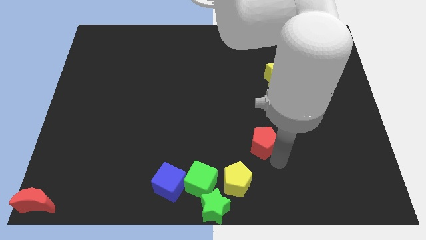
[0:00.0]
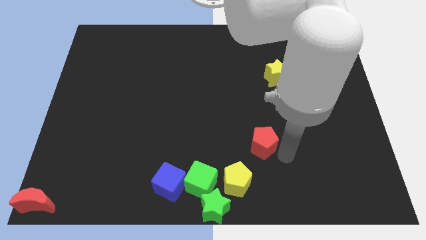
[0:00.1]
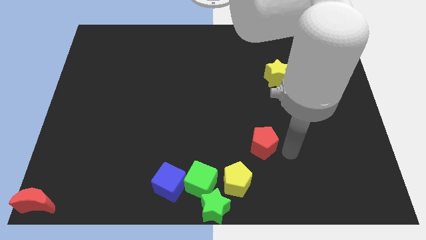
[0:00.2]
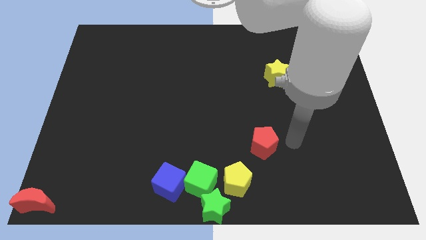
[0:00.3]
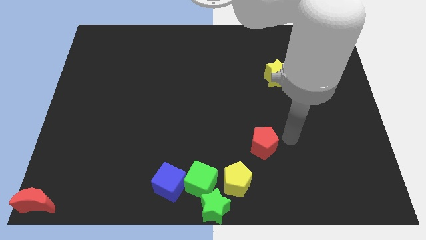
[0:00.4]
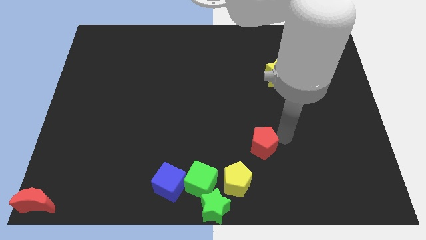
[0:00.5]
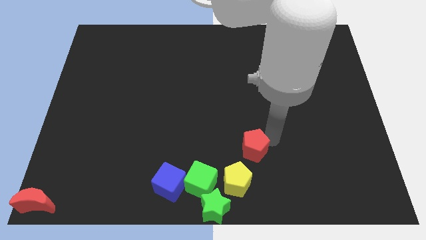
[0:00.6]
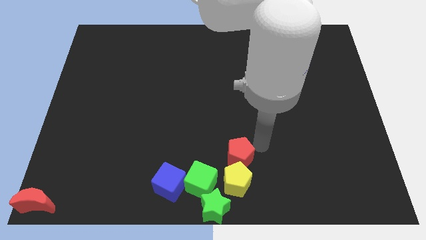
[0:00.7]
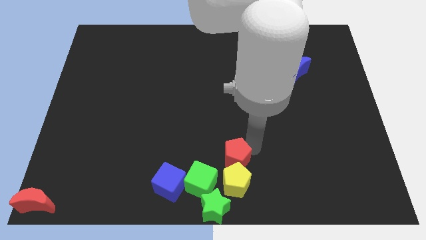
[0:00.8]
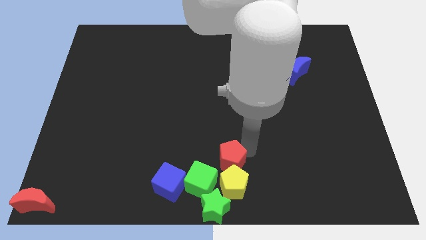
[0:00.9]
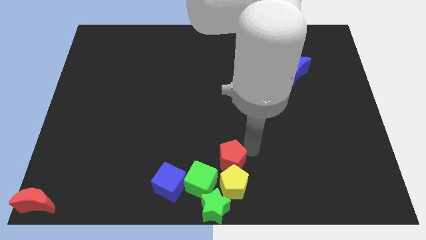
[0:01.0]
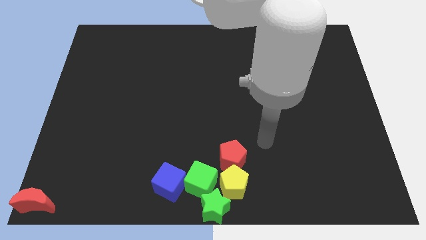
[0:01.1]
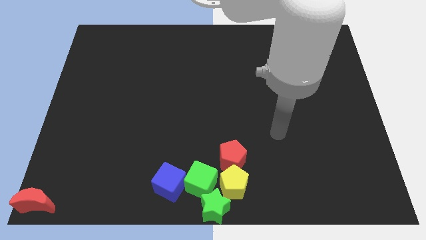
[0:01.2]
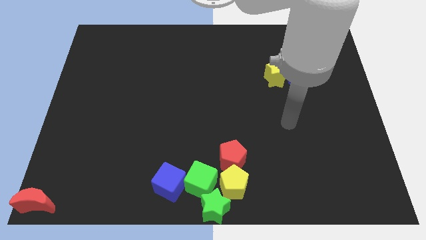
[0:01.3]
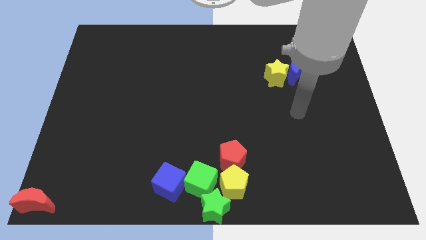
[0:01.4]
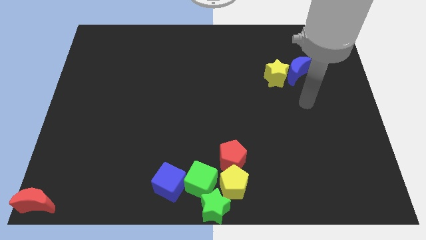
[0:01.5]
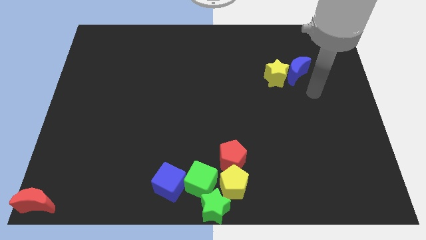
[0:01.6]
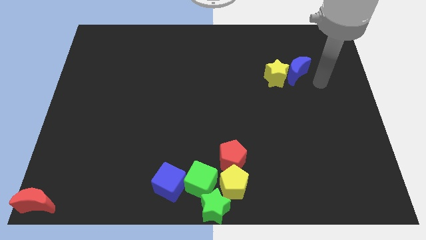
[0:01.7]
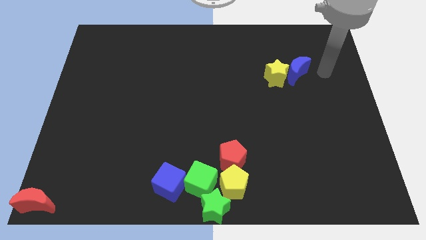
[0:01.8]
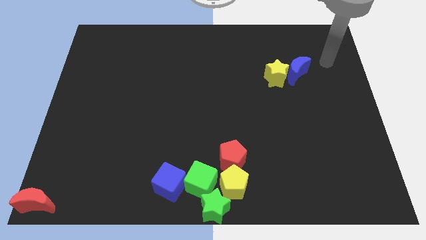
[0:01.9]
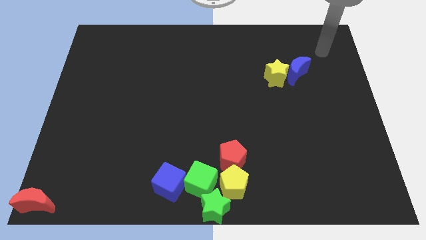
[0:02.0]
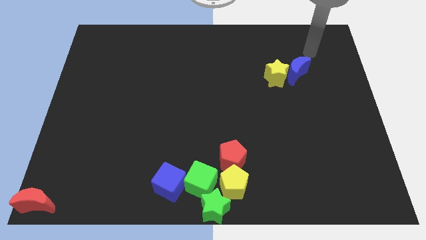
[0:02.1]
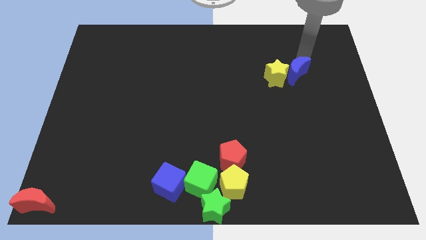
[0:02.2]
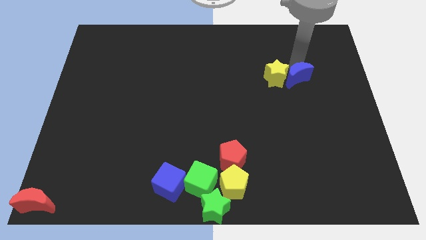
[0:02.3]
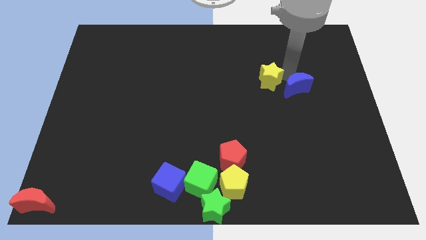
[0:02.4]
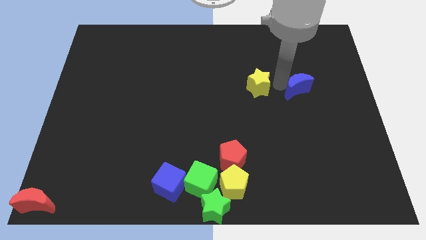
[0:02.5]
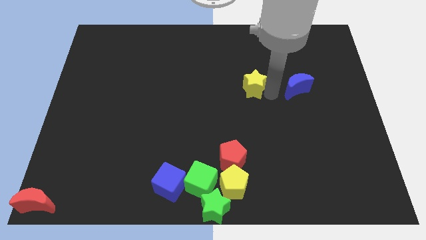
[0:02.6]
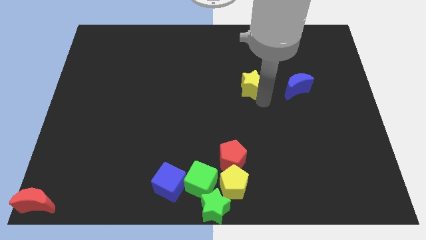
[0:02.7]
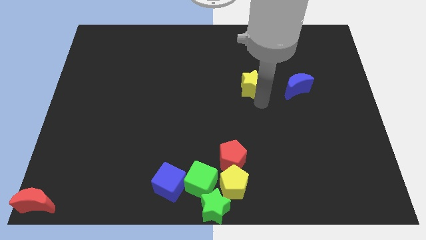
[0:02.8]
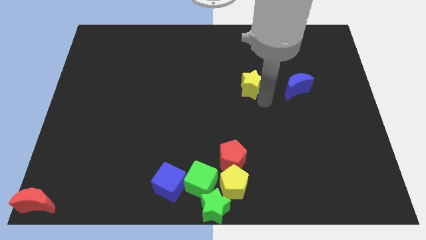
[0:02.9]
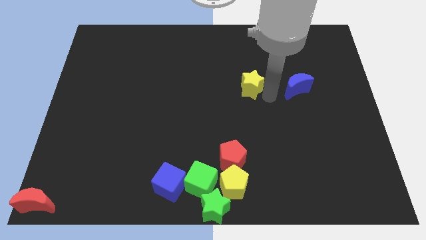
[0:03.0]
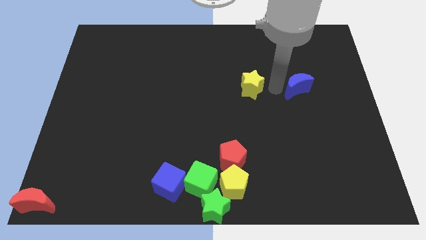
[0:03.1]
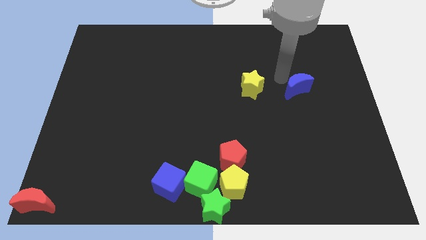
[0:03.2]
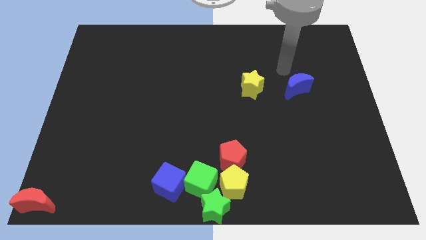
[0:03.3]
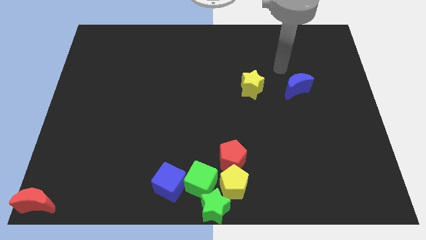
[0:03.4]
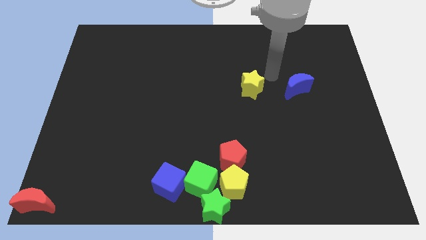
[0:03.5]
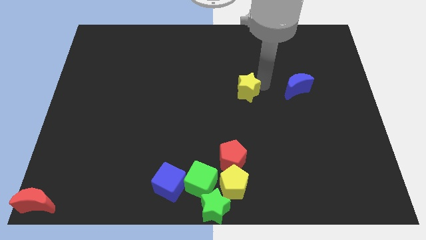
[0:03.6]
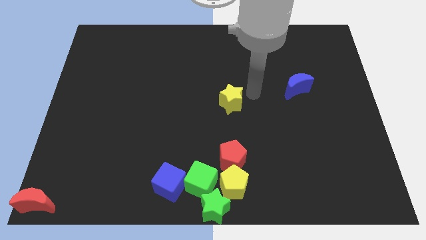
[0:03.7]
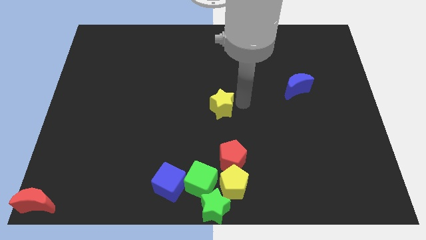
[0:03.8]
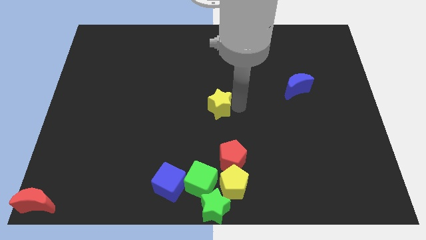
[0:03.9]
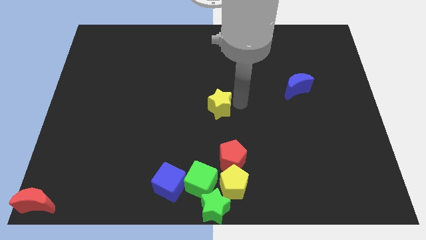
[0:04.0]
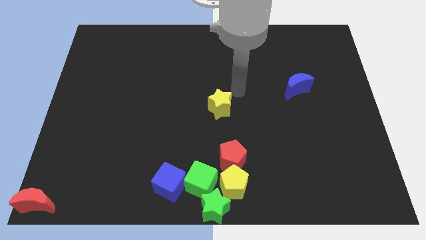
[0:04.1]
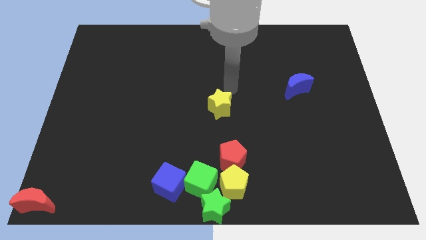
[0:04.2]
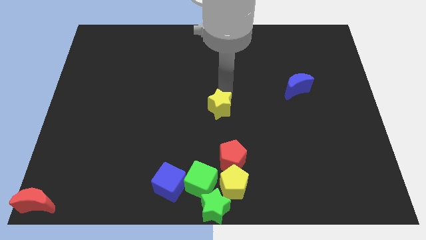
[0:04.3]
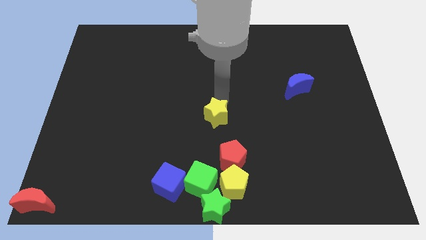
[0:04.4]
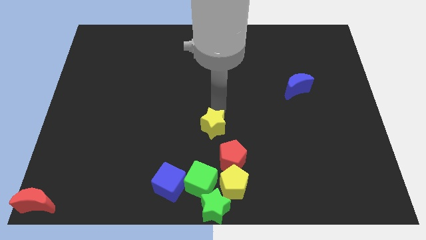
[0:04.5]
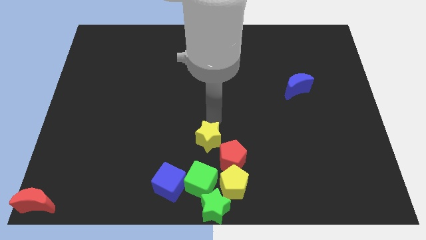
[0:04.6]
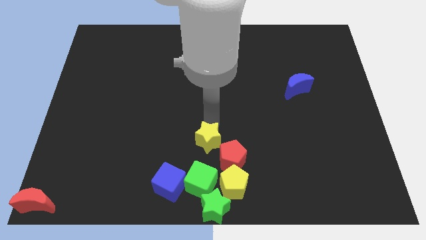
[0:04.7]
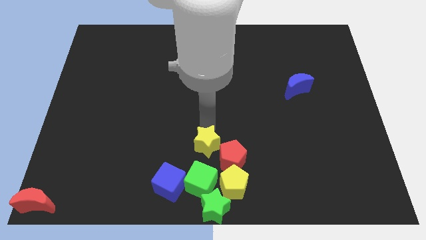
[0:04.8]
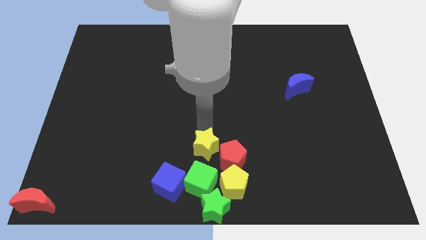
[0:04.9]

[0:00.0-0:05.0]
move red pentagon yellow star into the group of blocks

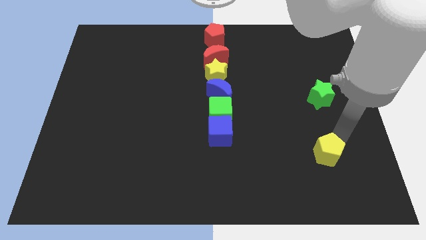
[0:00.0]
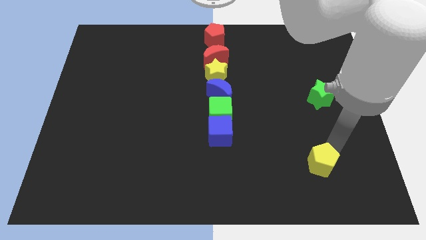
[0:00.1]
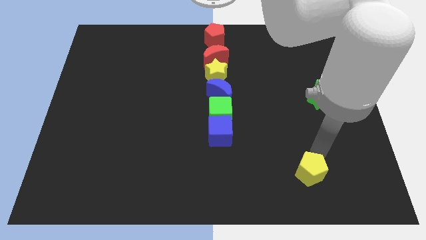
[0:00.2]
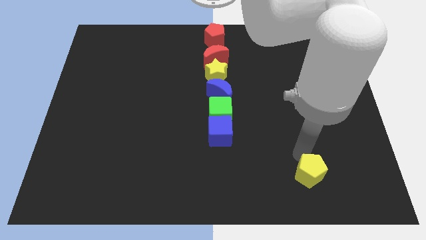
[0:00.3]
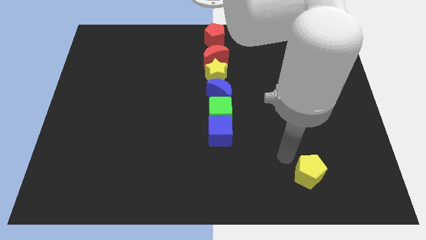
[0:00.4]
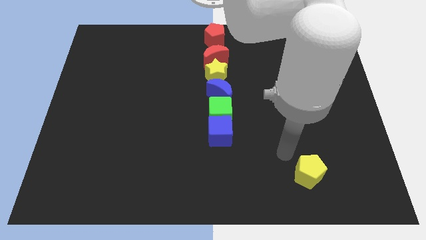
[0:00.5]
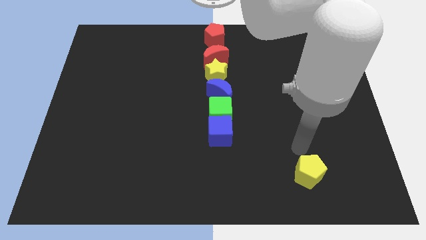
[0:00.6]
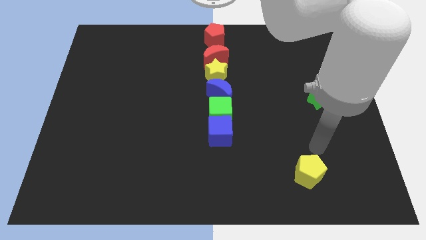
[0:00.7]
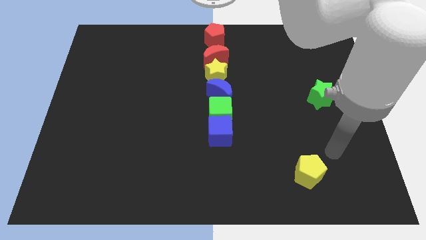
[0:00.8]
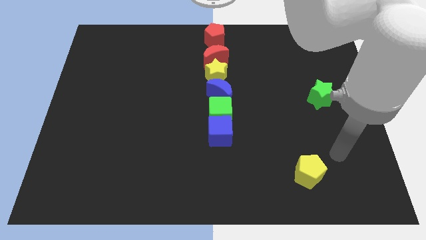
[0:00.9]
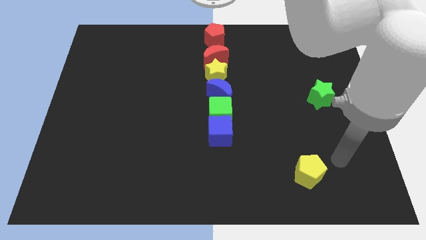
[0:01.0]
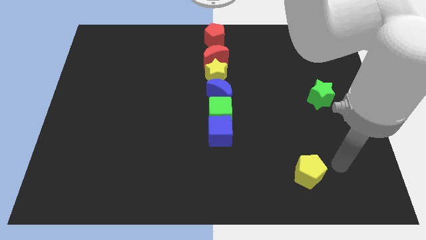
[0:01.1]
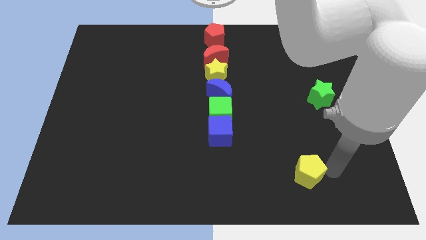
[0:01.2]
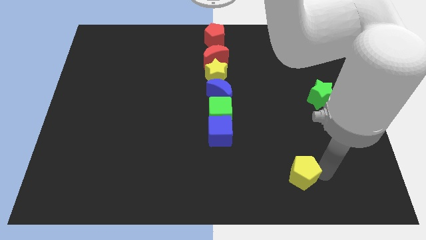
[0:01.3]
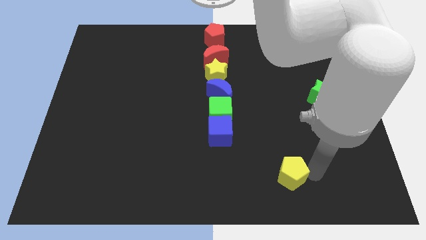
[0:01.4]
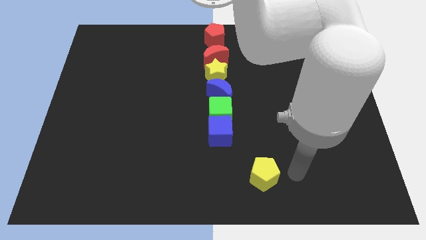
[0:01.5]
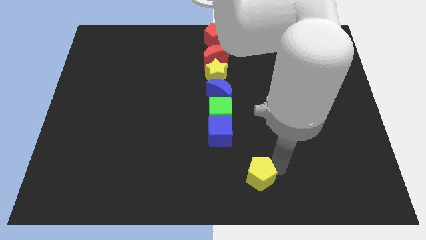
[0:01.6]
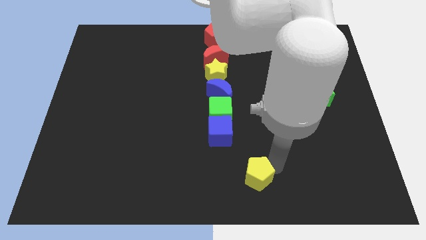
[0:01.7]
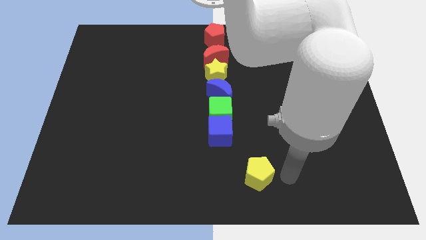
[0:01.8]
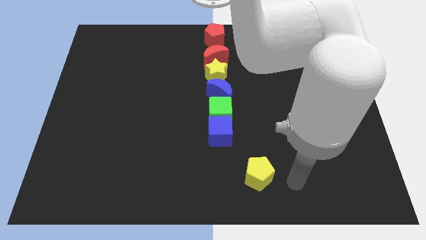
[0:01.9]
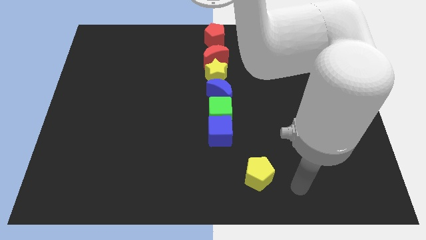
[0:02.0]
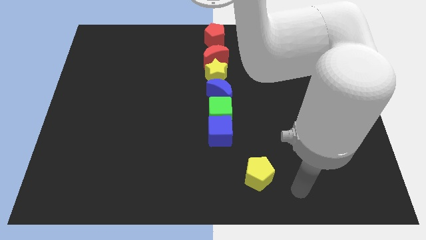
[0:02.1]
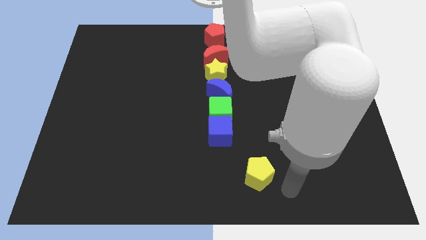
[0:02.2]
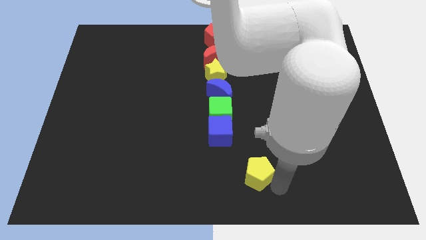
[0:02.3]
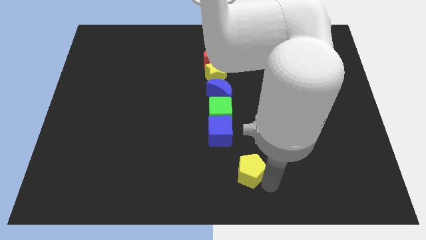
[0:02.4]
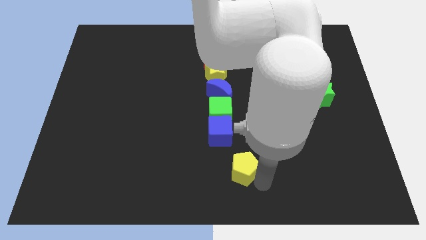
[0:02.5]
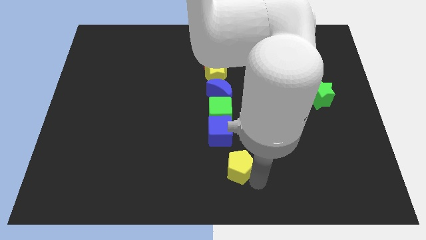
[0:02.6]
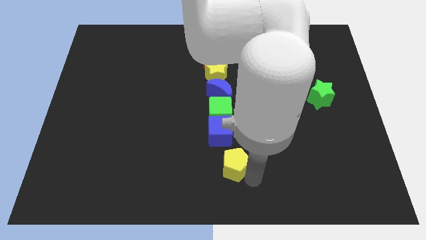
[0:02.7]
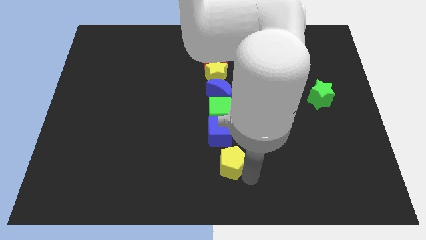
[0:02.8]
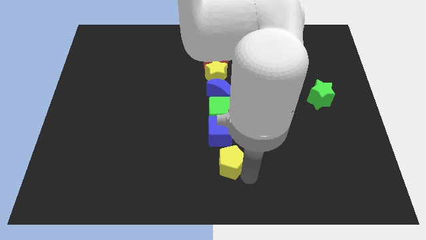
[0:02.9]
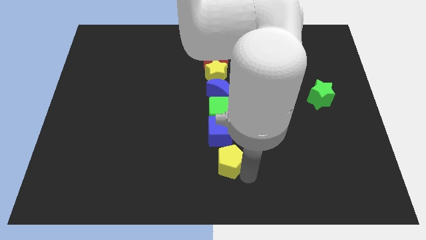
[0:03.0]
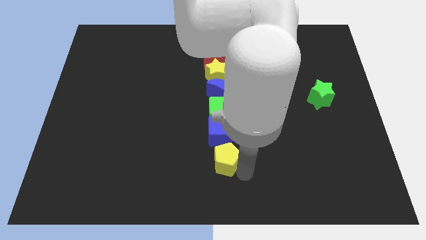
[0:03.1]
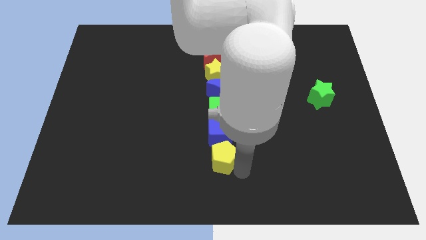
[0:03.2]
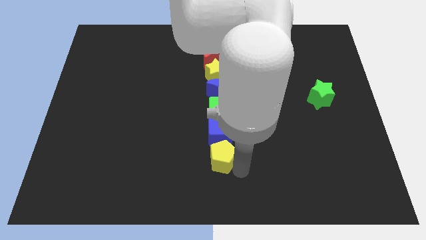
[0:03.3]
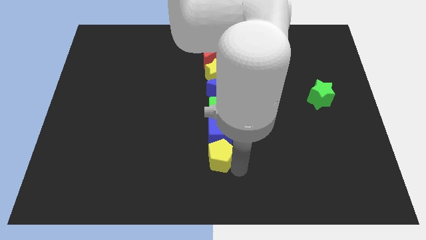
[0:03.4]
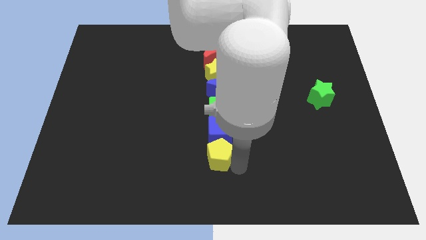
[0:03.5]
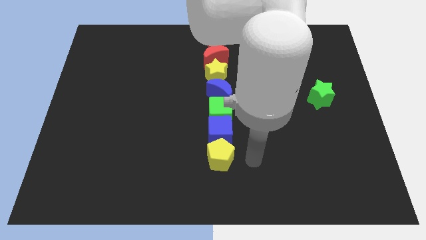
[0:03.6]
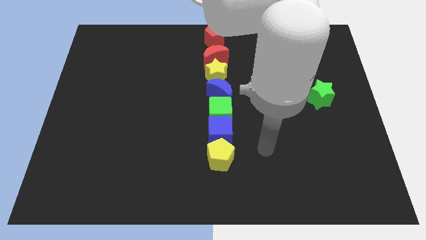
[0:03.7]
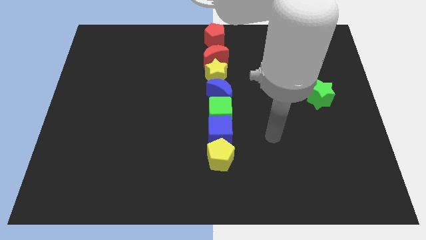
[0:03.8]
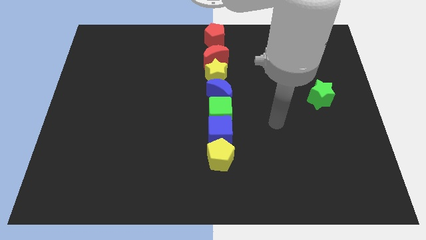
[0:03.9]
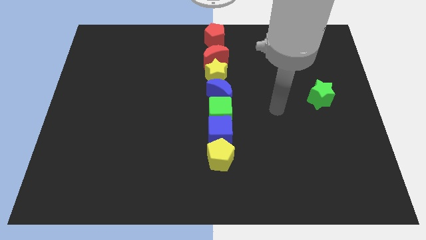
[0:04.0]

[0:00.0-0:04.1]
move yellow pentagon into blue cube
